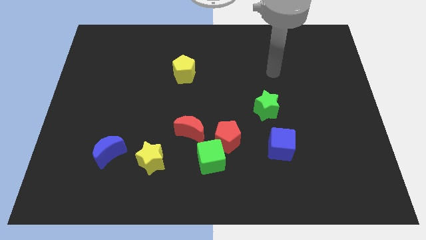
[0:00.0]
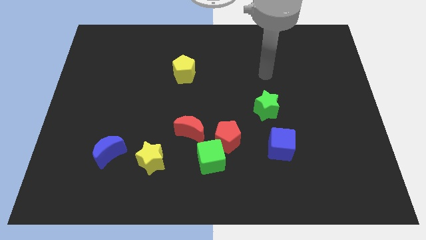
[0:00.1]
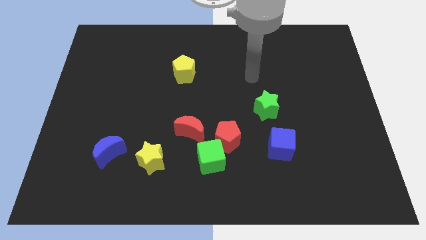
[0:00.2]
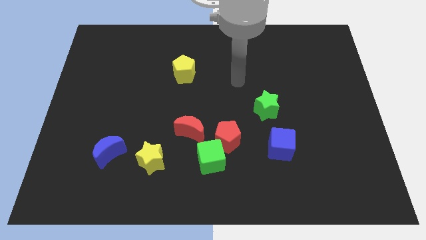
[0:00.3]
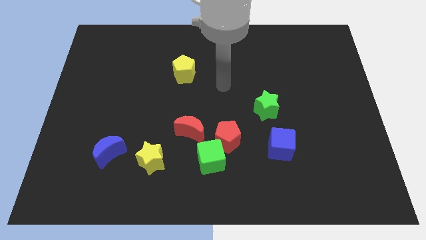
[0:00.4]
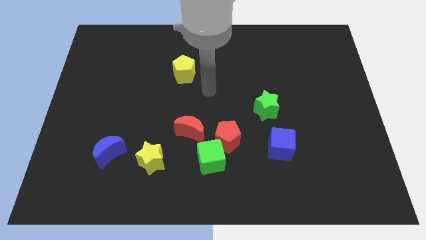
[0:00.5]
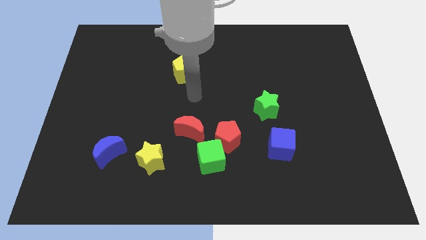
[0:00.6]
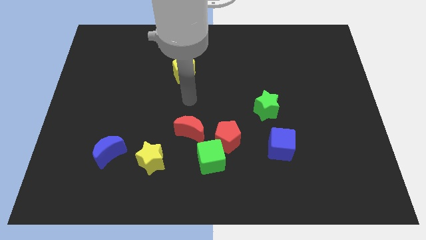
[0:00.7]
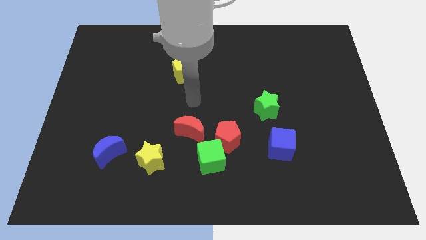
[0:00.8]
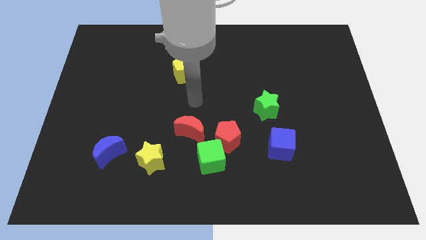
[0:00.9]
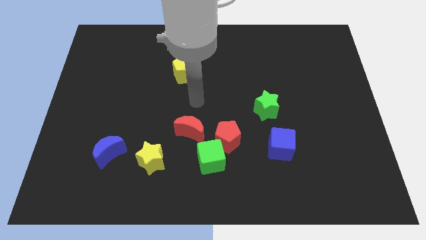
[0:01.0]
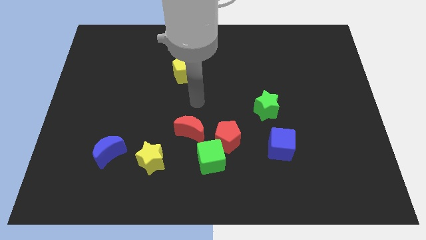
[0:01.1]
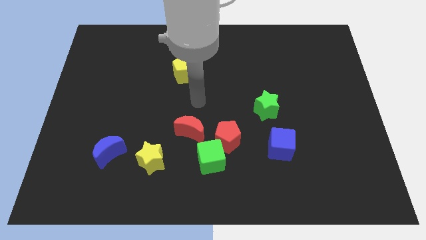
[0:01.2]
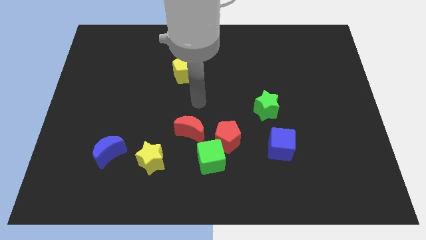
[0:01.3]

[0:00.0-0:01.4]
move your arm towards the yellow pentagon

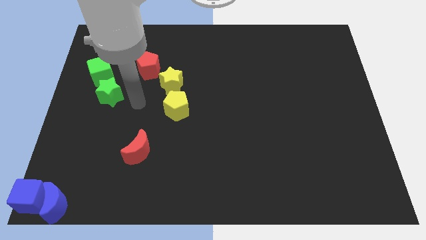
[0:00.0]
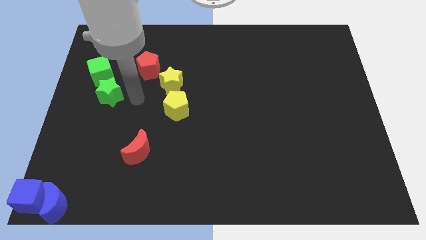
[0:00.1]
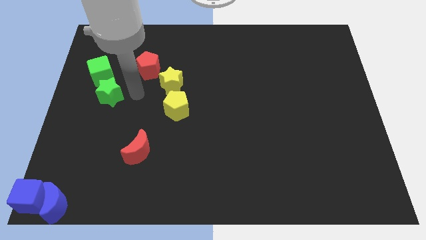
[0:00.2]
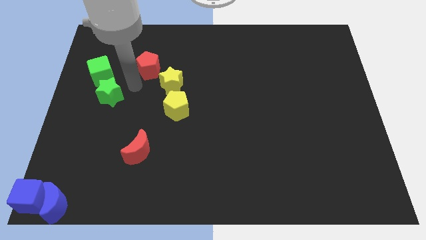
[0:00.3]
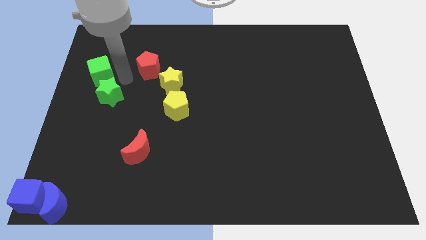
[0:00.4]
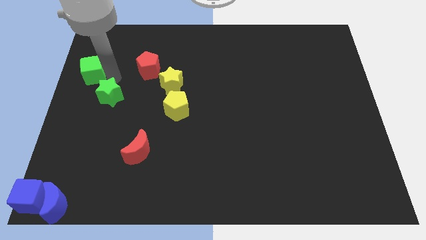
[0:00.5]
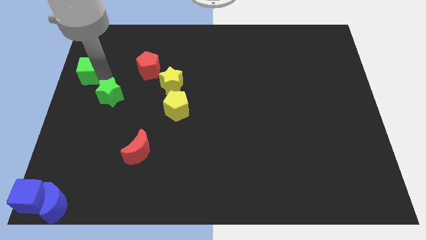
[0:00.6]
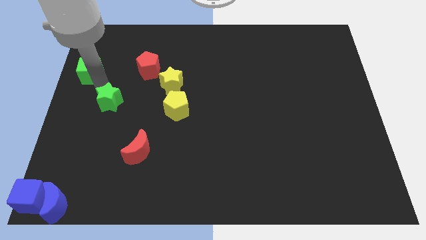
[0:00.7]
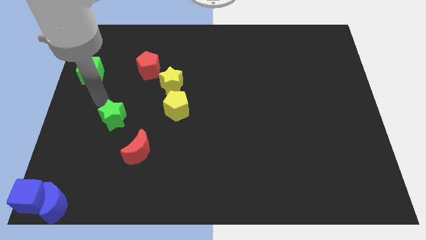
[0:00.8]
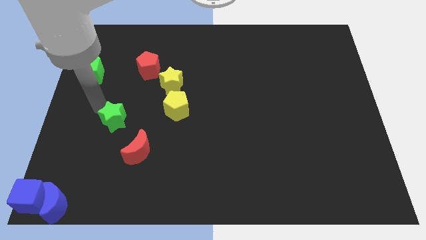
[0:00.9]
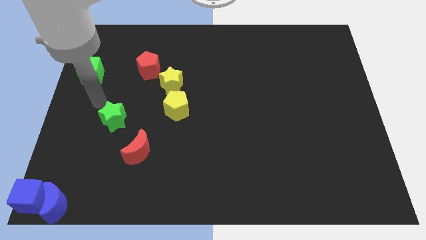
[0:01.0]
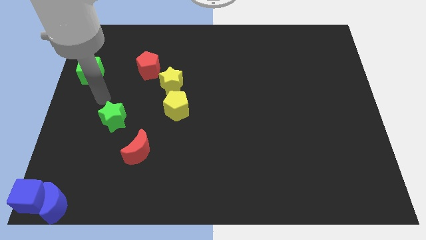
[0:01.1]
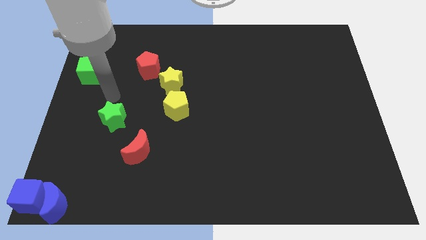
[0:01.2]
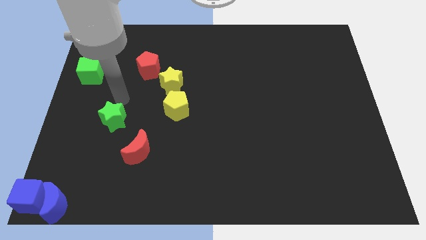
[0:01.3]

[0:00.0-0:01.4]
separate the green star from the green cube

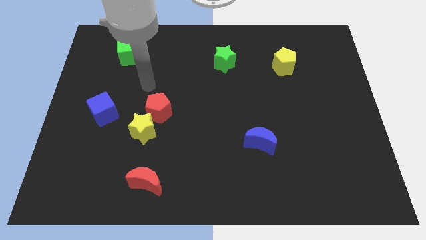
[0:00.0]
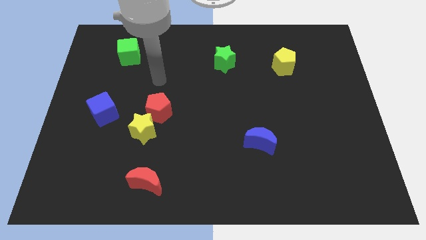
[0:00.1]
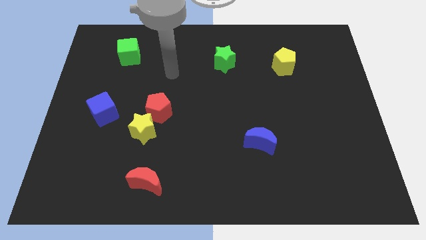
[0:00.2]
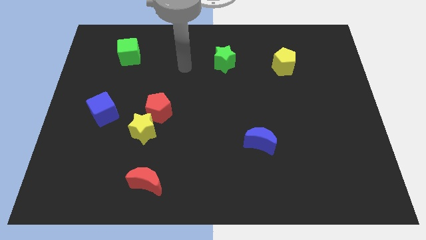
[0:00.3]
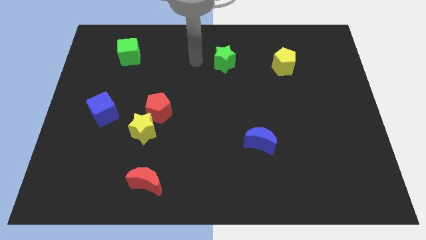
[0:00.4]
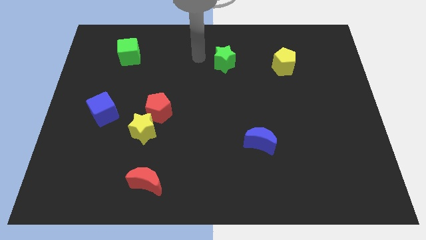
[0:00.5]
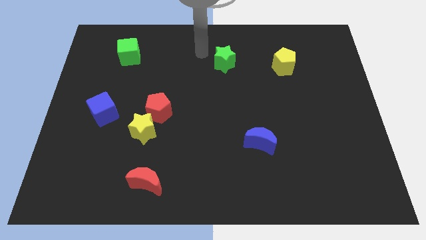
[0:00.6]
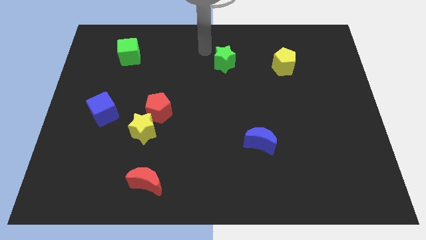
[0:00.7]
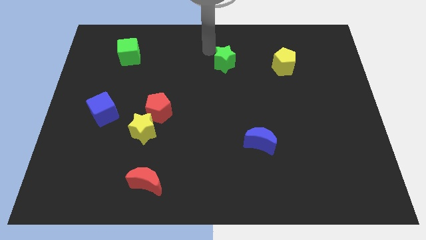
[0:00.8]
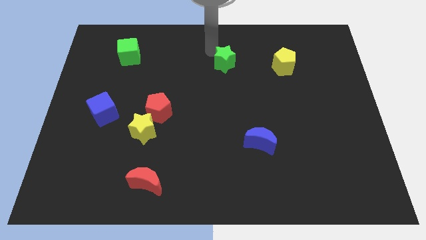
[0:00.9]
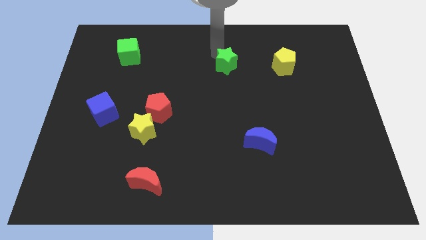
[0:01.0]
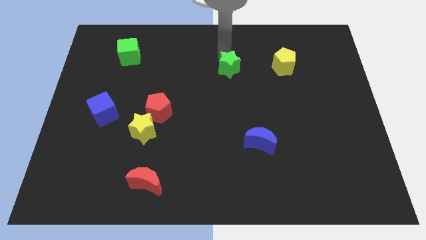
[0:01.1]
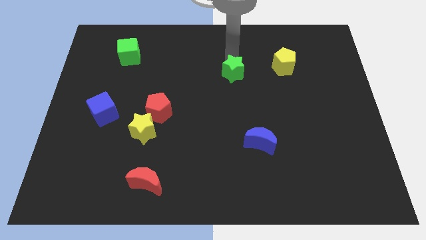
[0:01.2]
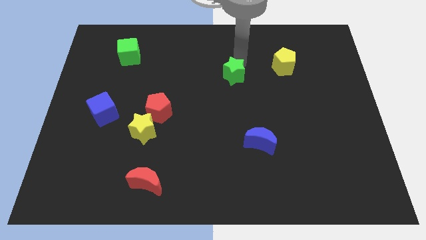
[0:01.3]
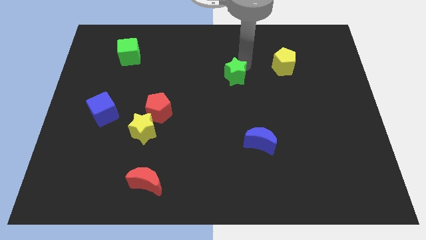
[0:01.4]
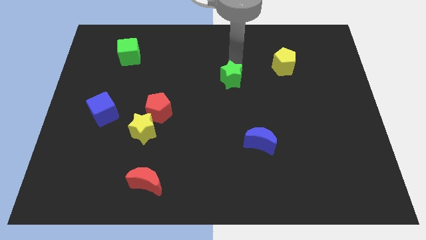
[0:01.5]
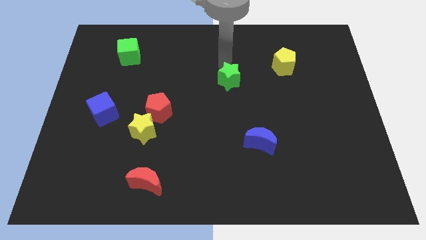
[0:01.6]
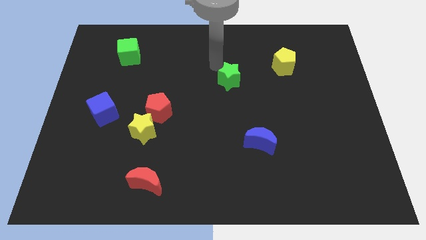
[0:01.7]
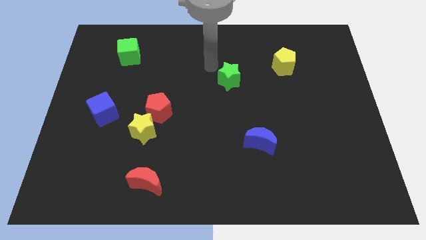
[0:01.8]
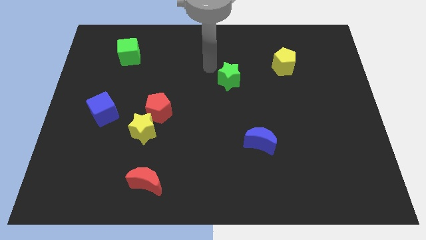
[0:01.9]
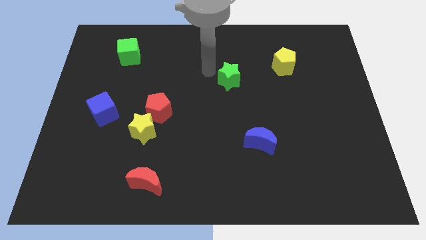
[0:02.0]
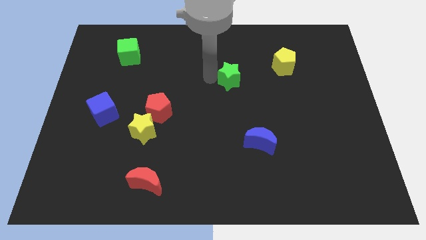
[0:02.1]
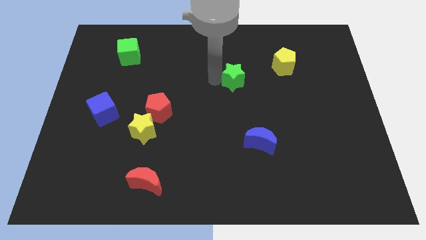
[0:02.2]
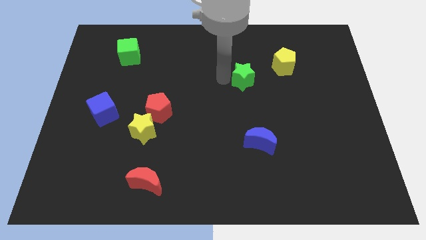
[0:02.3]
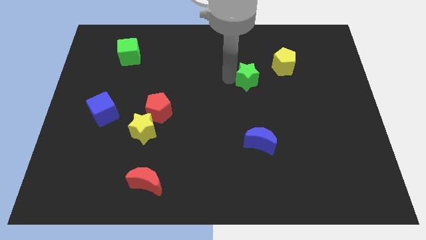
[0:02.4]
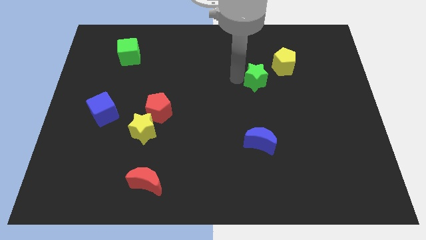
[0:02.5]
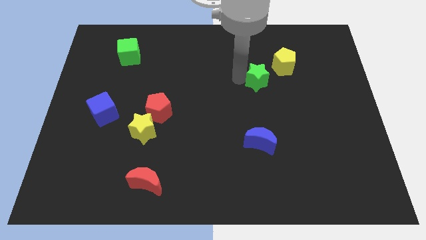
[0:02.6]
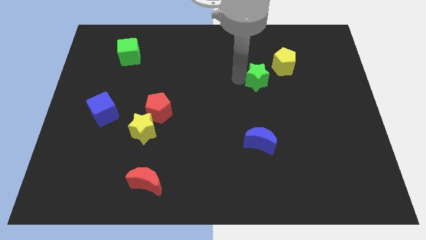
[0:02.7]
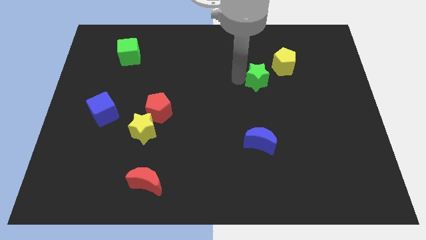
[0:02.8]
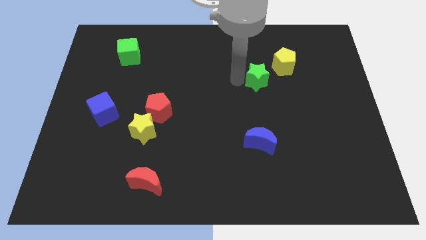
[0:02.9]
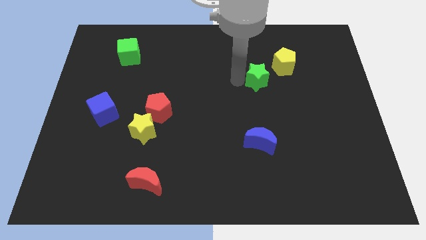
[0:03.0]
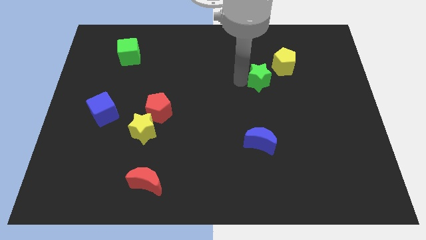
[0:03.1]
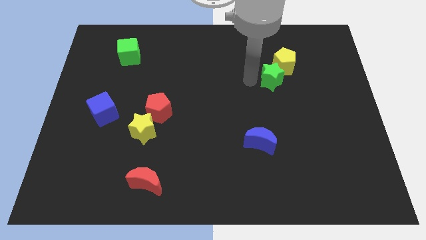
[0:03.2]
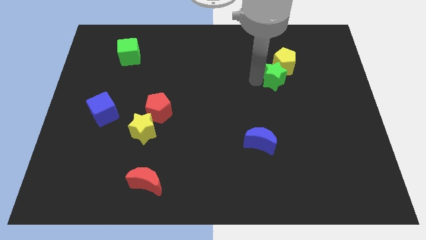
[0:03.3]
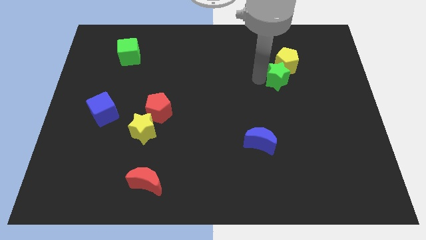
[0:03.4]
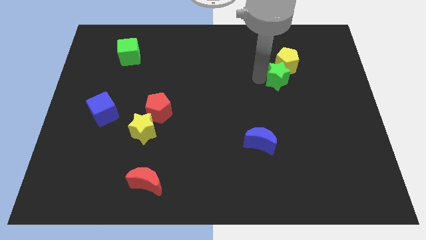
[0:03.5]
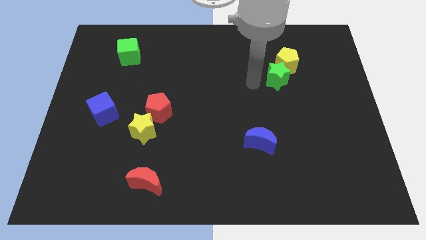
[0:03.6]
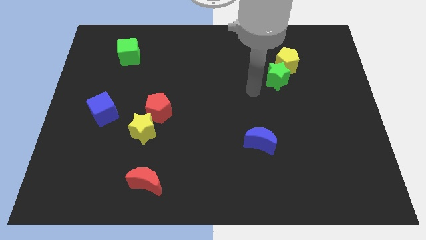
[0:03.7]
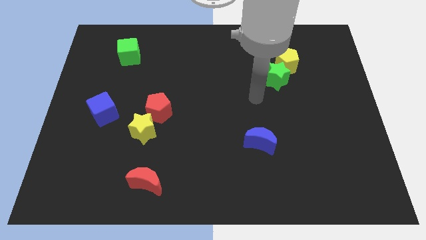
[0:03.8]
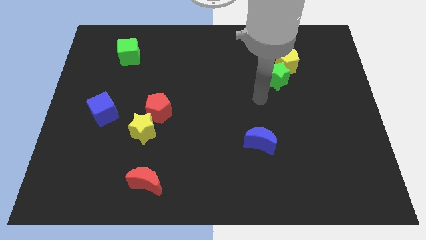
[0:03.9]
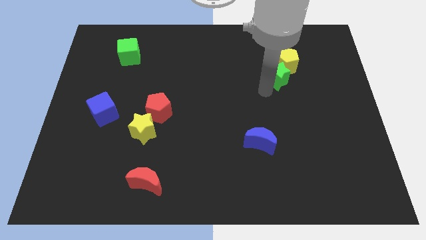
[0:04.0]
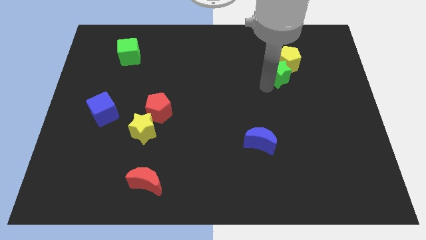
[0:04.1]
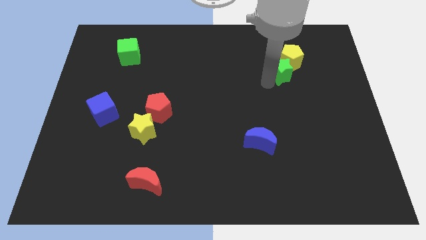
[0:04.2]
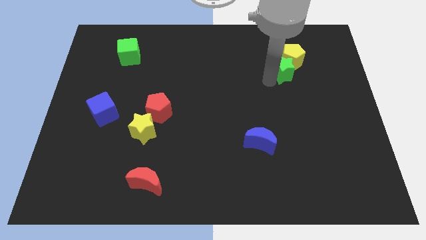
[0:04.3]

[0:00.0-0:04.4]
place the green star closer to the yellow pentagon

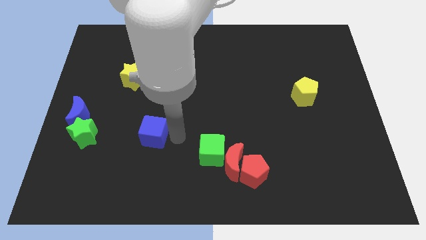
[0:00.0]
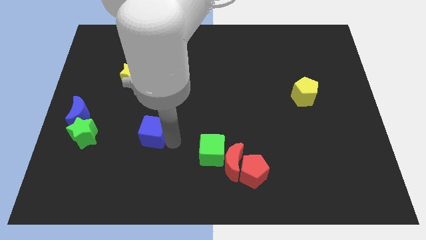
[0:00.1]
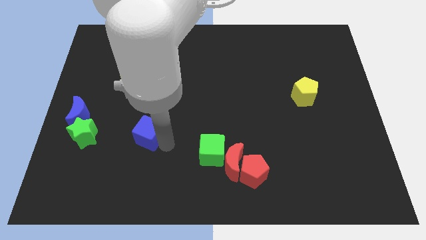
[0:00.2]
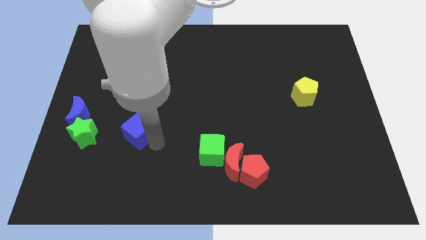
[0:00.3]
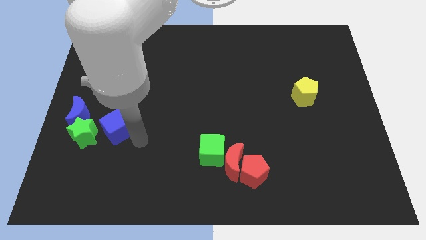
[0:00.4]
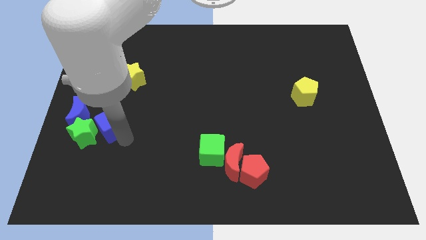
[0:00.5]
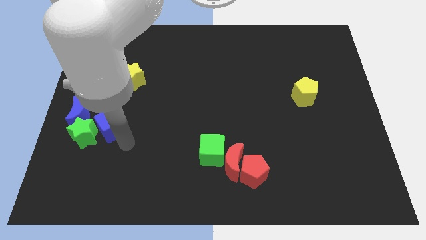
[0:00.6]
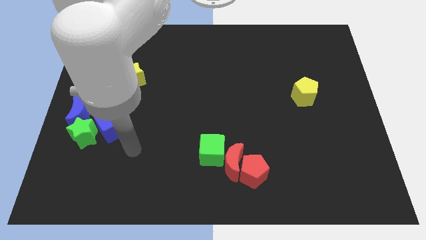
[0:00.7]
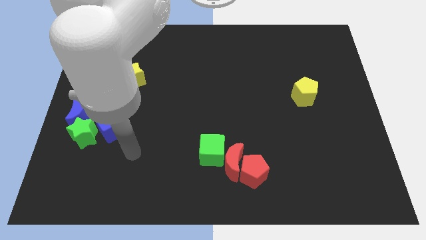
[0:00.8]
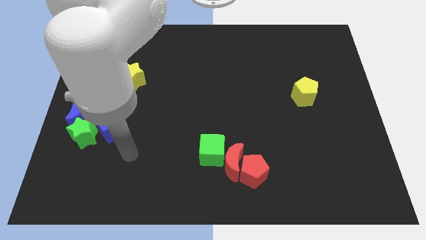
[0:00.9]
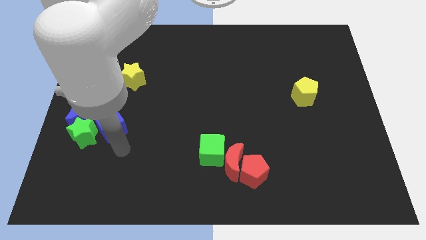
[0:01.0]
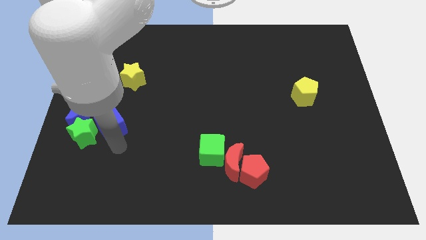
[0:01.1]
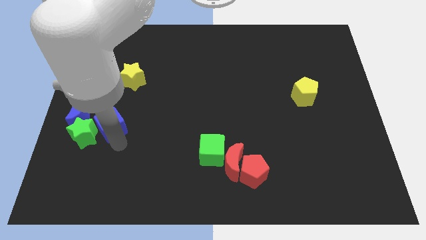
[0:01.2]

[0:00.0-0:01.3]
push the blue cube towards the green star

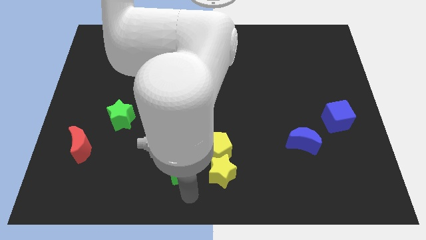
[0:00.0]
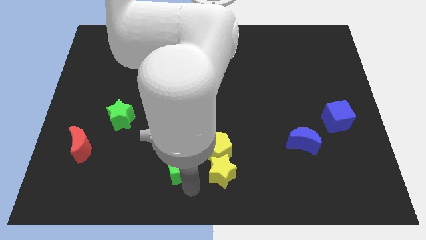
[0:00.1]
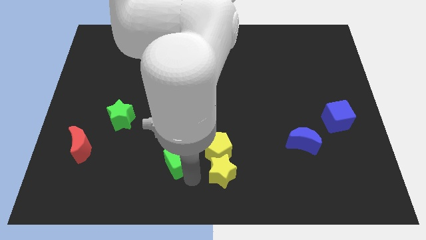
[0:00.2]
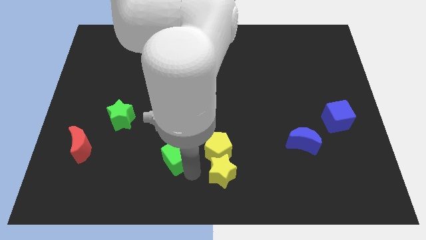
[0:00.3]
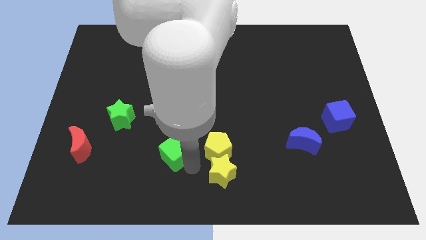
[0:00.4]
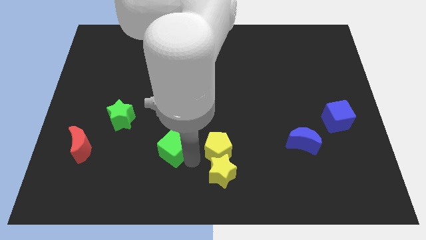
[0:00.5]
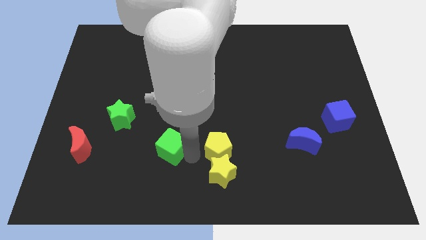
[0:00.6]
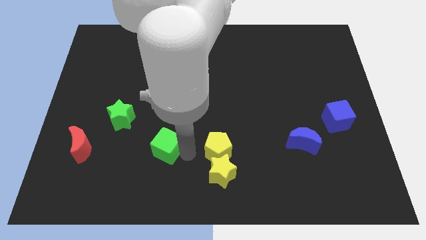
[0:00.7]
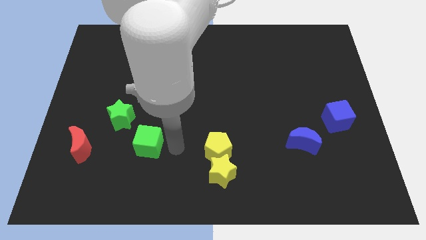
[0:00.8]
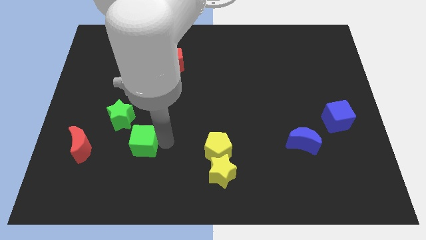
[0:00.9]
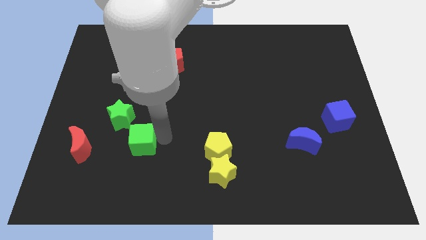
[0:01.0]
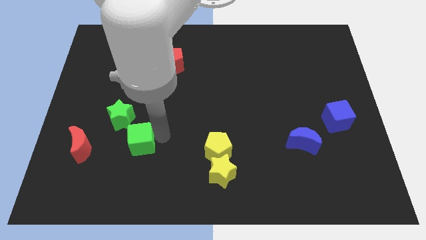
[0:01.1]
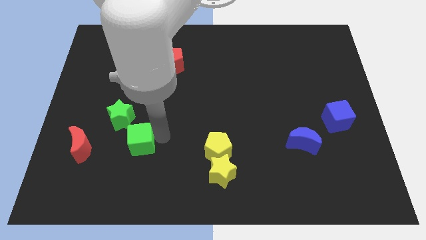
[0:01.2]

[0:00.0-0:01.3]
move the green cube towards the green star
